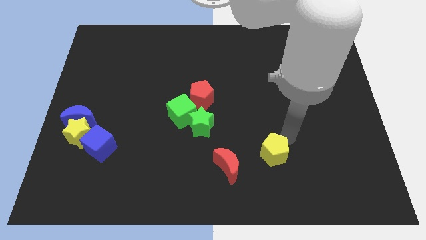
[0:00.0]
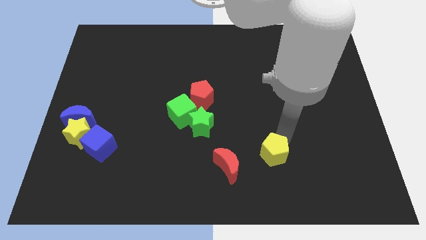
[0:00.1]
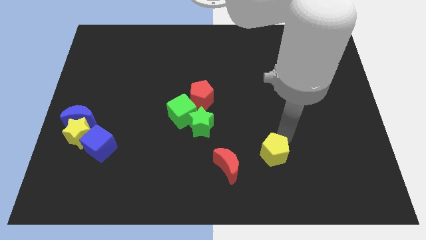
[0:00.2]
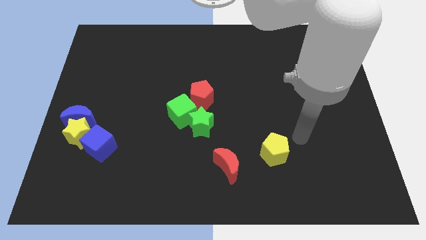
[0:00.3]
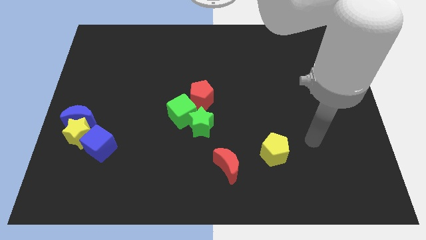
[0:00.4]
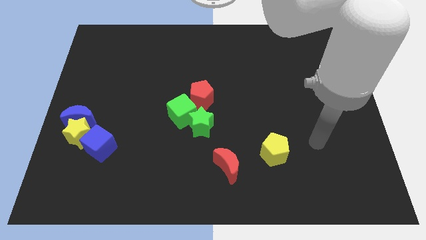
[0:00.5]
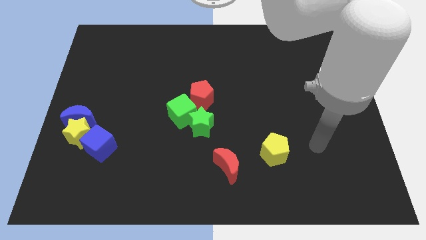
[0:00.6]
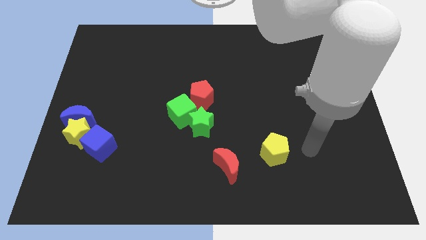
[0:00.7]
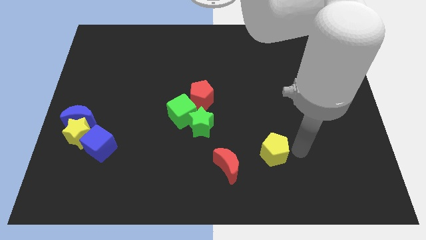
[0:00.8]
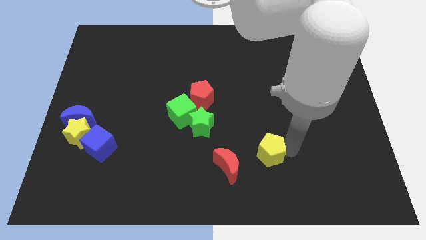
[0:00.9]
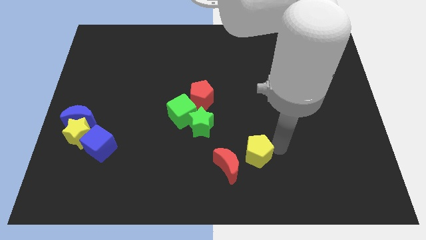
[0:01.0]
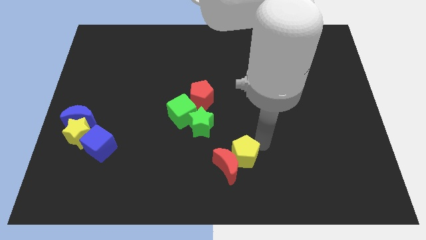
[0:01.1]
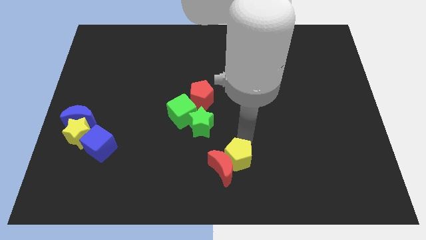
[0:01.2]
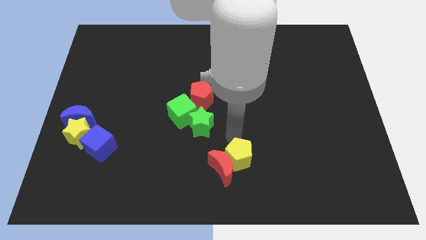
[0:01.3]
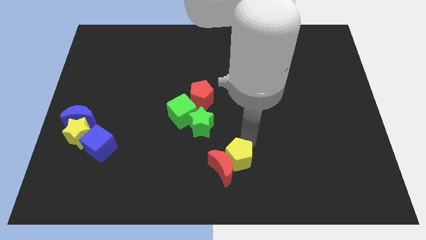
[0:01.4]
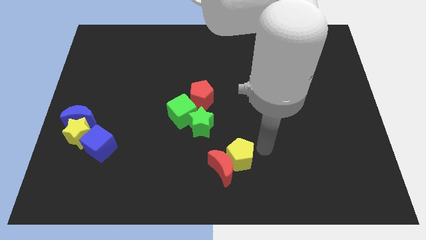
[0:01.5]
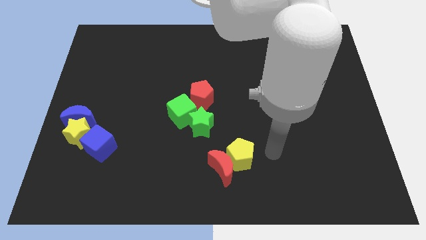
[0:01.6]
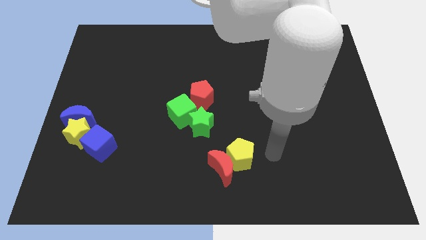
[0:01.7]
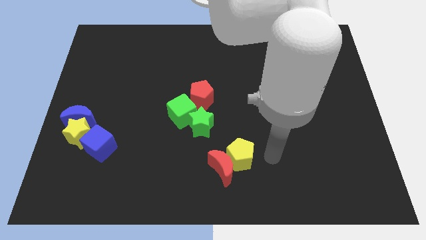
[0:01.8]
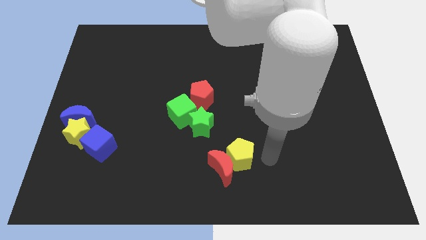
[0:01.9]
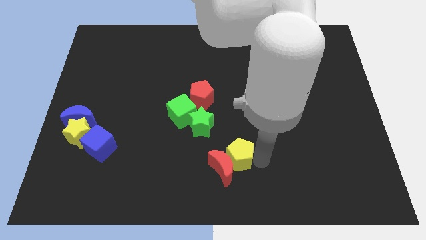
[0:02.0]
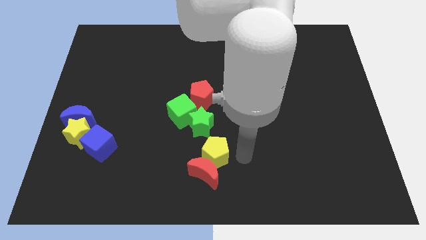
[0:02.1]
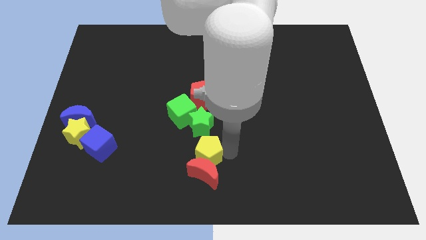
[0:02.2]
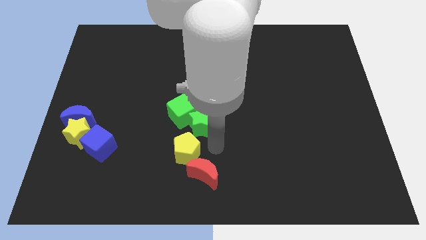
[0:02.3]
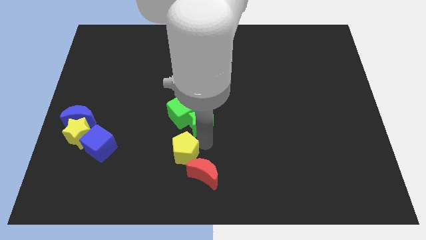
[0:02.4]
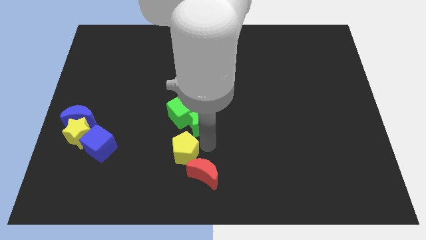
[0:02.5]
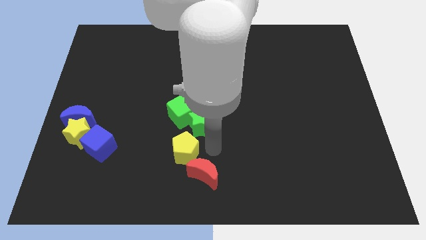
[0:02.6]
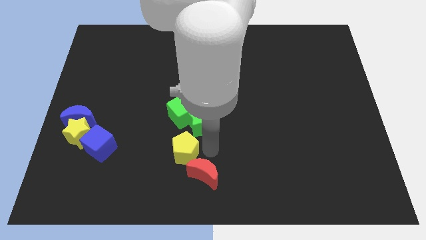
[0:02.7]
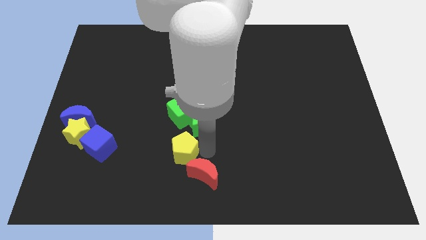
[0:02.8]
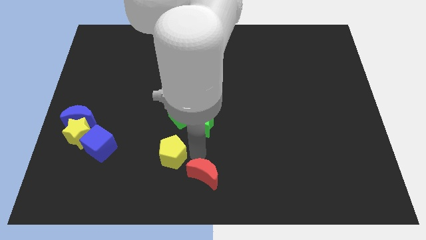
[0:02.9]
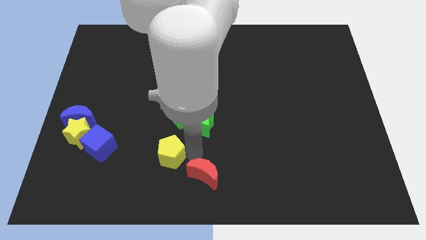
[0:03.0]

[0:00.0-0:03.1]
move the yellow pentagon diagonally on the top left side of the red crescent

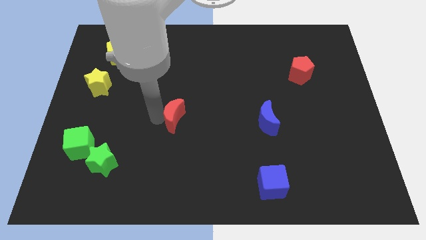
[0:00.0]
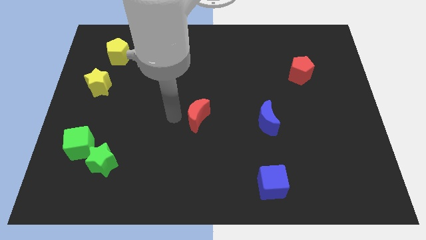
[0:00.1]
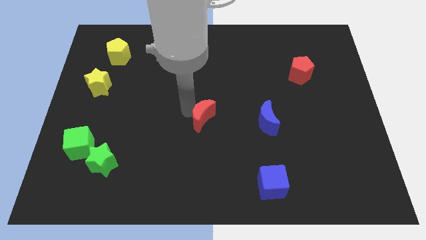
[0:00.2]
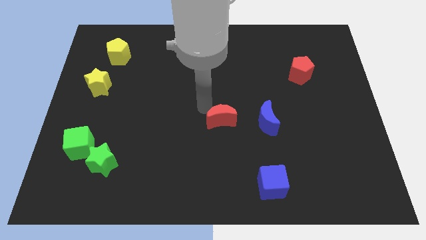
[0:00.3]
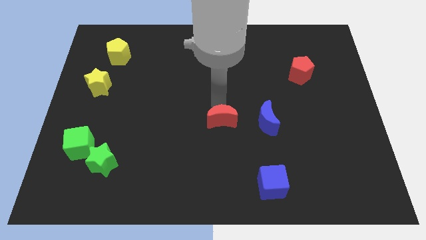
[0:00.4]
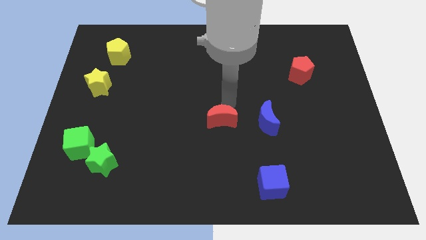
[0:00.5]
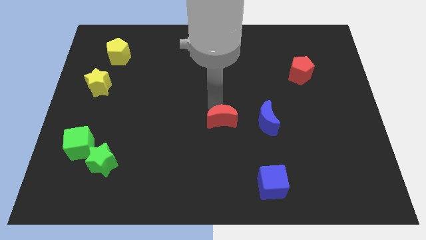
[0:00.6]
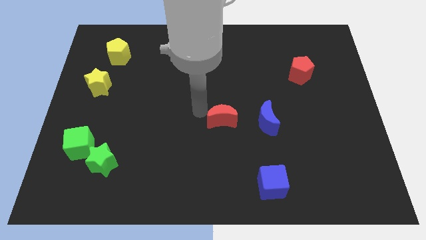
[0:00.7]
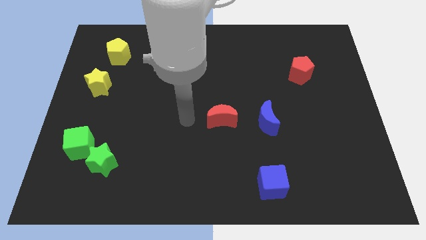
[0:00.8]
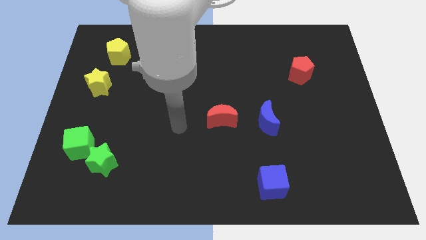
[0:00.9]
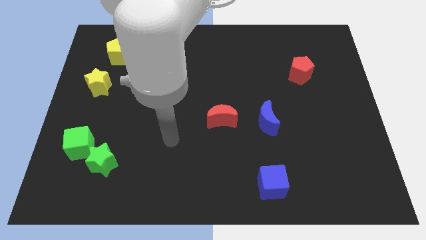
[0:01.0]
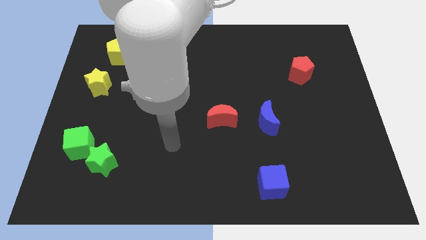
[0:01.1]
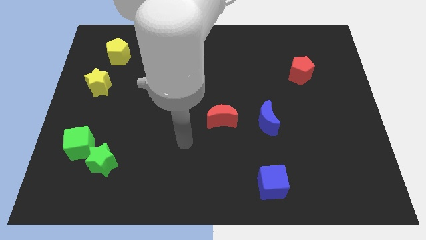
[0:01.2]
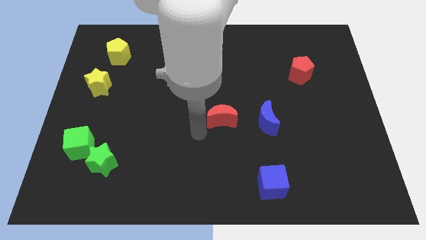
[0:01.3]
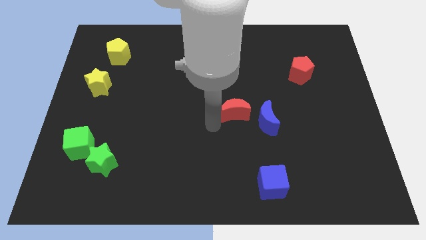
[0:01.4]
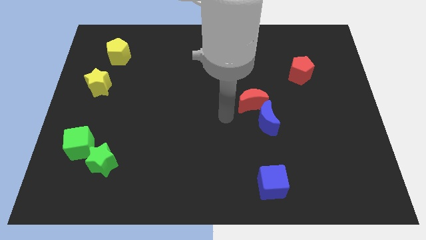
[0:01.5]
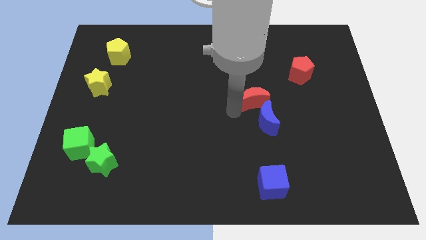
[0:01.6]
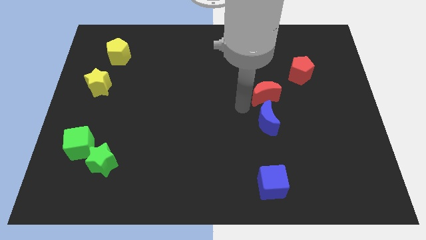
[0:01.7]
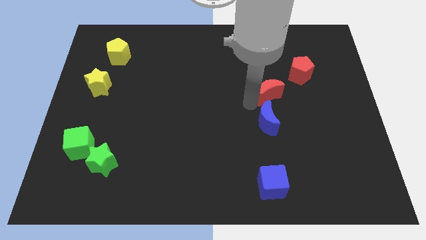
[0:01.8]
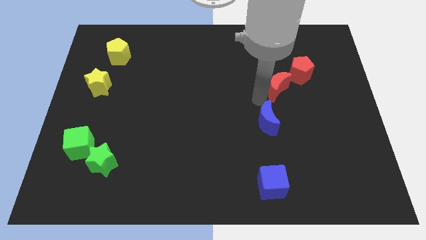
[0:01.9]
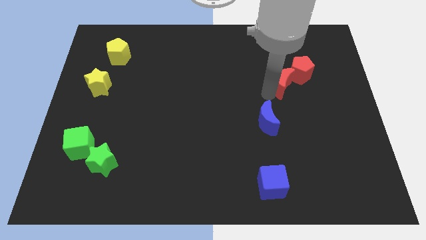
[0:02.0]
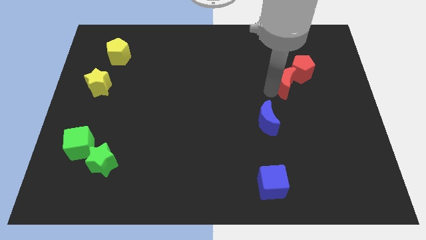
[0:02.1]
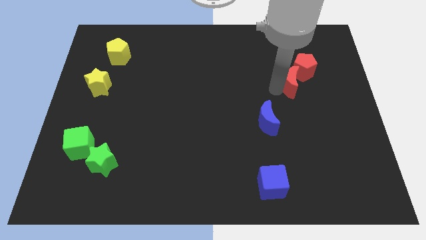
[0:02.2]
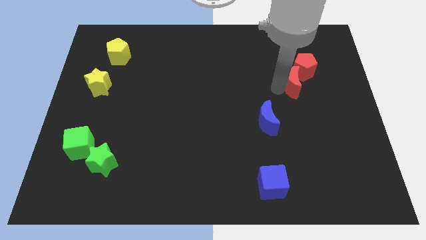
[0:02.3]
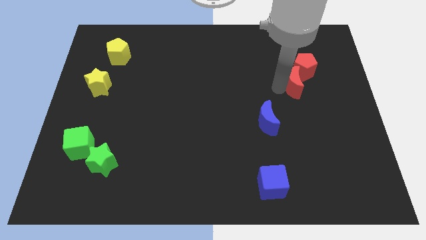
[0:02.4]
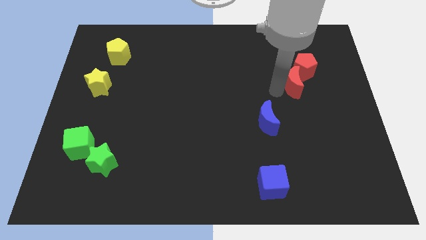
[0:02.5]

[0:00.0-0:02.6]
push the red crescent into the red pentagon

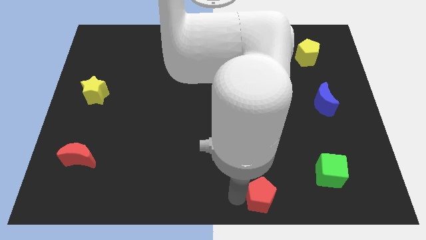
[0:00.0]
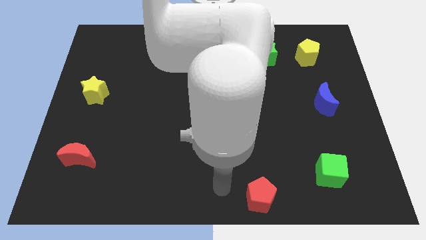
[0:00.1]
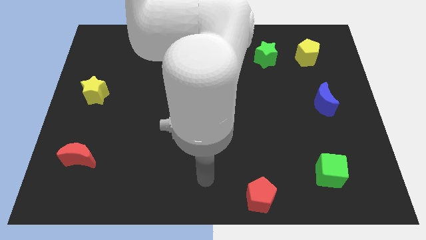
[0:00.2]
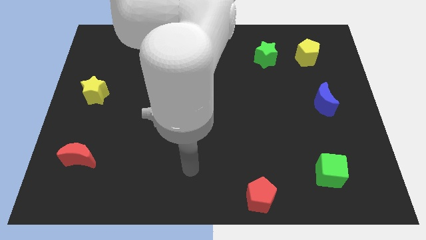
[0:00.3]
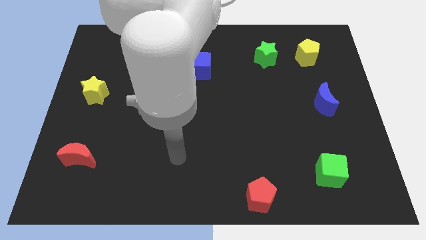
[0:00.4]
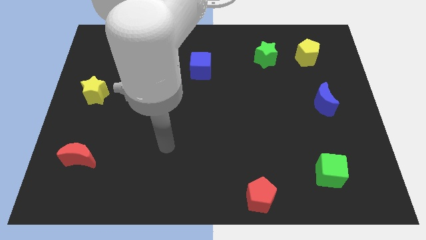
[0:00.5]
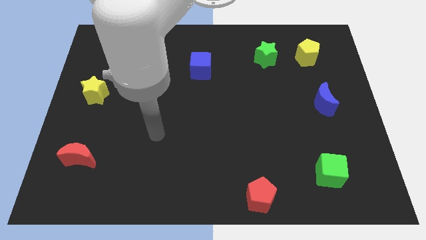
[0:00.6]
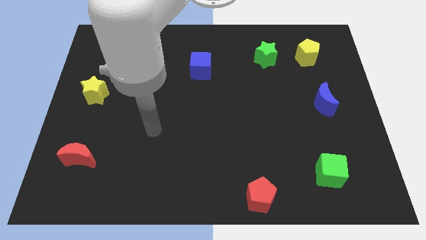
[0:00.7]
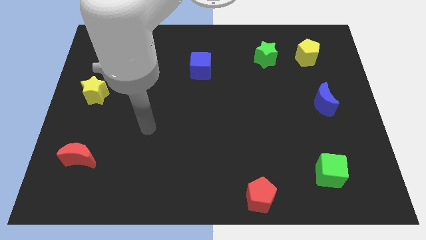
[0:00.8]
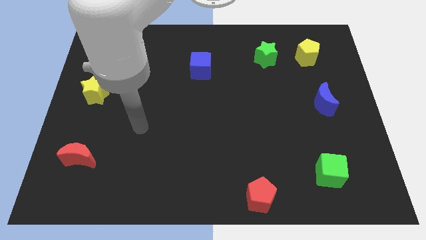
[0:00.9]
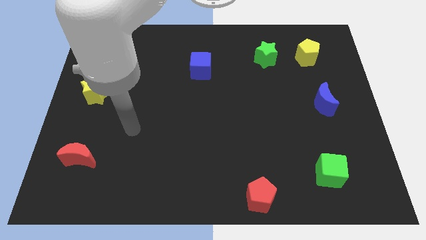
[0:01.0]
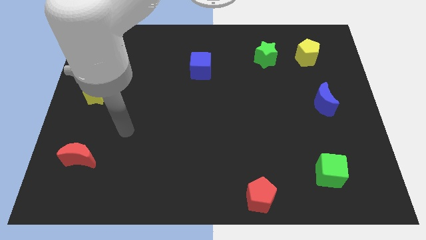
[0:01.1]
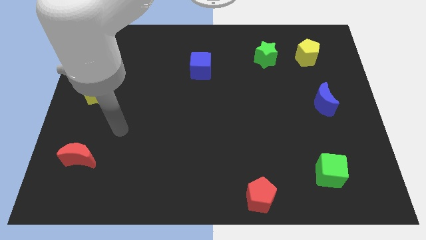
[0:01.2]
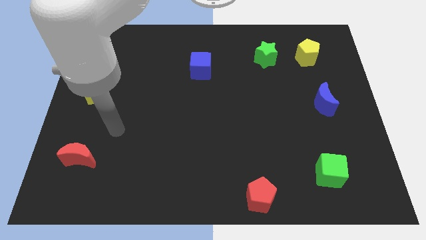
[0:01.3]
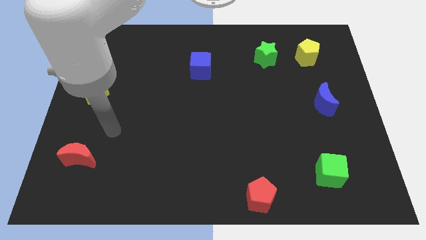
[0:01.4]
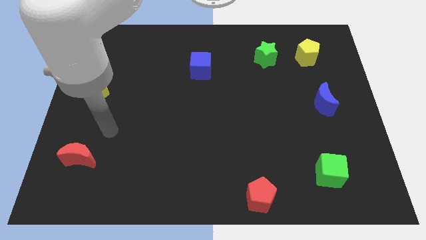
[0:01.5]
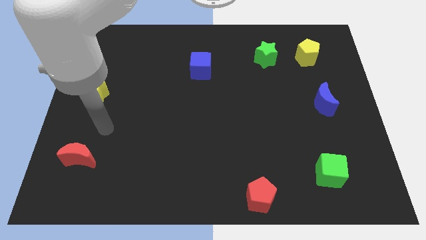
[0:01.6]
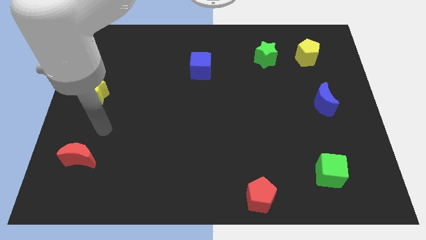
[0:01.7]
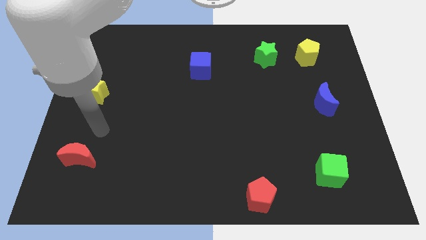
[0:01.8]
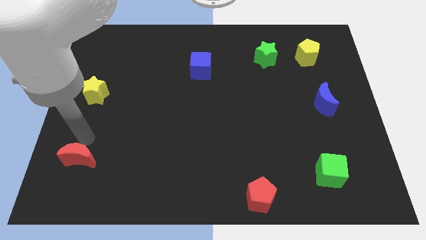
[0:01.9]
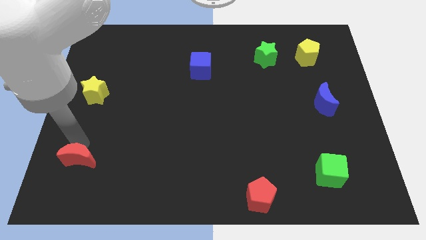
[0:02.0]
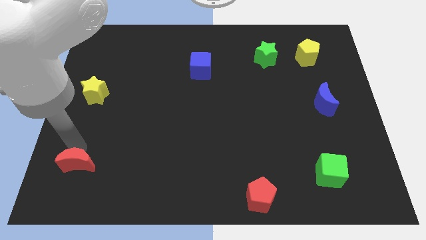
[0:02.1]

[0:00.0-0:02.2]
point your arm at the top of the red crescent

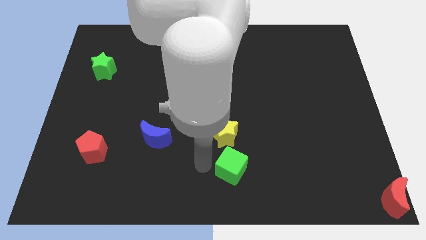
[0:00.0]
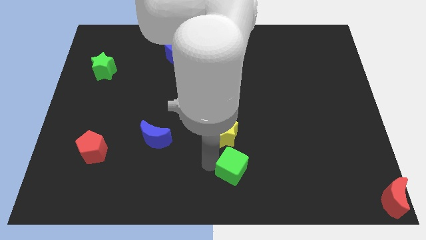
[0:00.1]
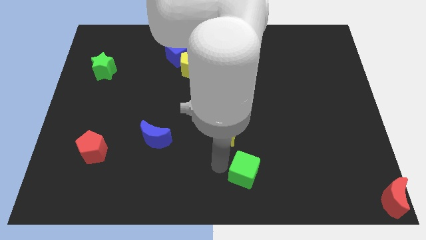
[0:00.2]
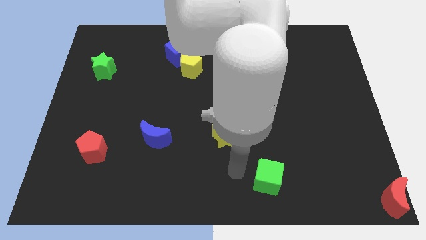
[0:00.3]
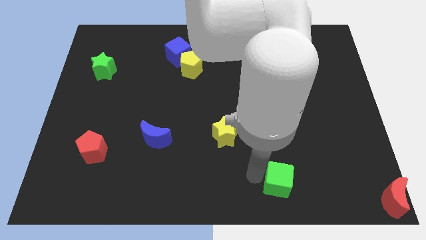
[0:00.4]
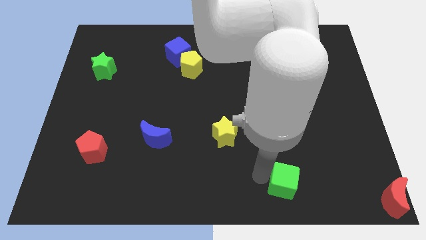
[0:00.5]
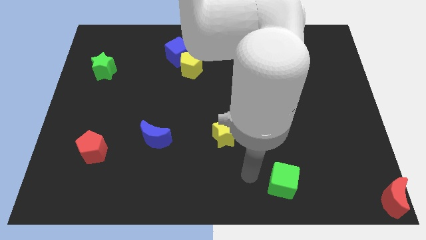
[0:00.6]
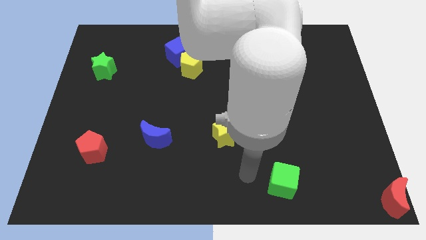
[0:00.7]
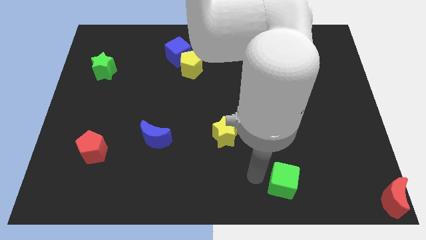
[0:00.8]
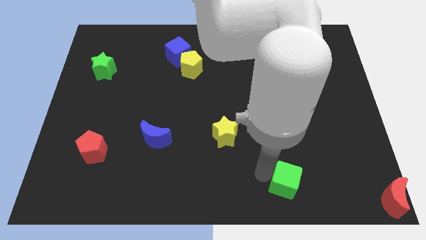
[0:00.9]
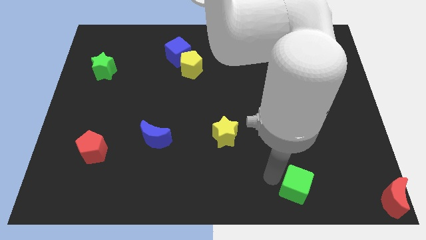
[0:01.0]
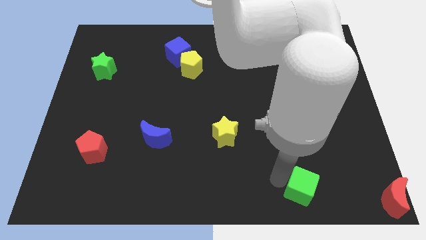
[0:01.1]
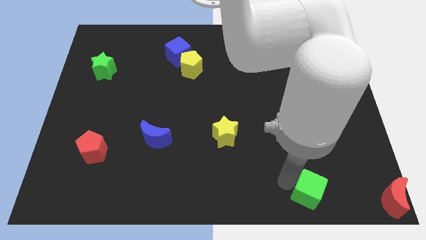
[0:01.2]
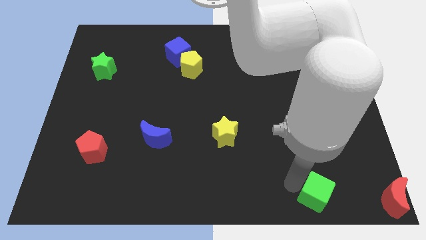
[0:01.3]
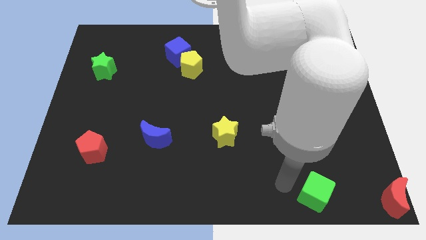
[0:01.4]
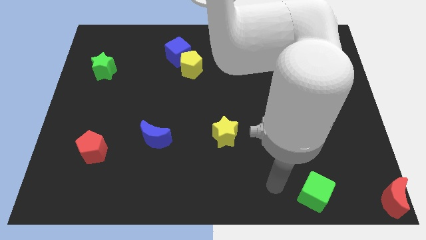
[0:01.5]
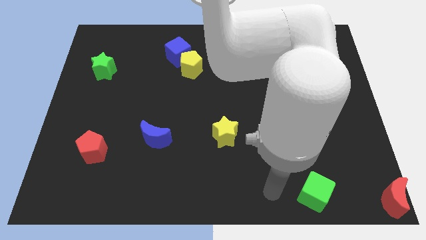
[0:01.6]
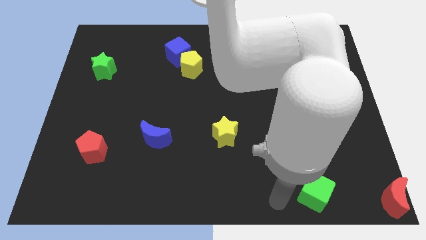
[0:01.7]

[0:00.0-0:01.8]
place the green cube at the left side of the red moon
